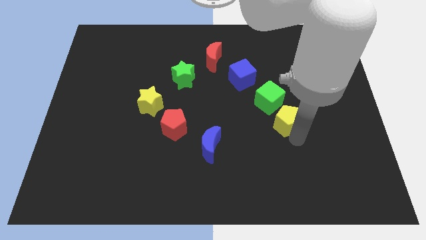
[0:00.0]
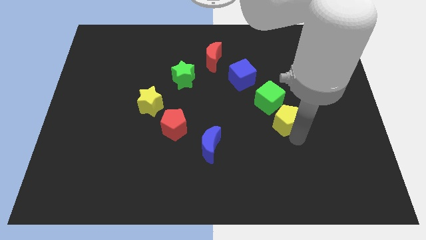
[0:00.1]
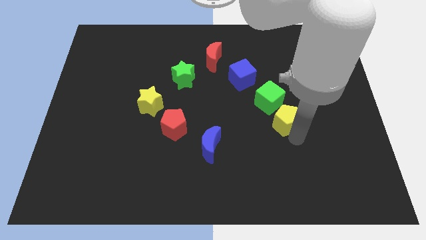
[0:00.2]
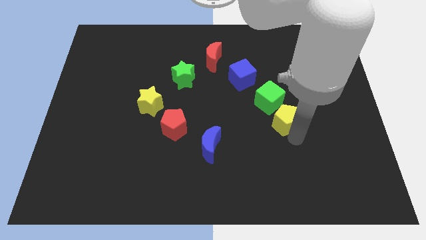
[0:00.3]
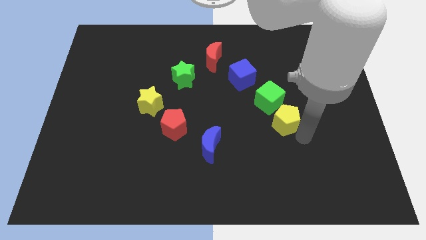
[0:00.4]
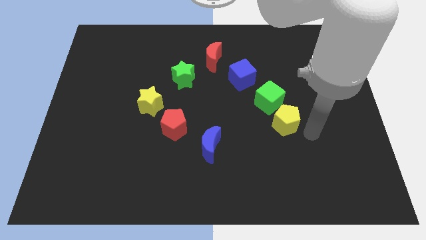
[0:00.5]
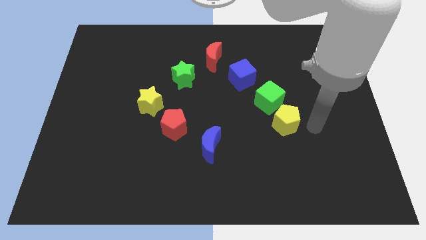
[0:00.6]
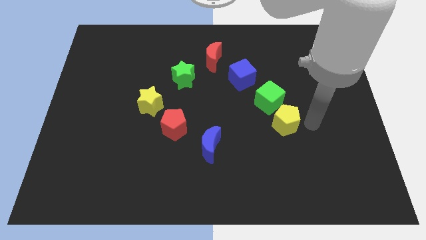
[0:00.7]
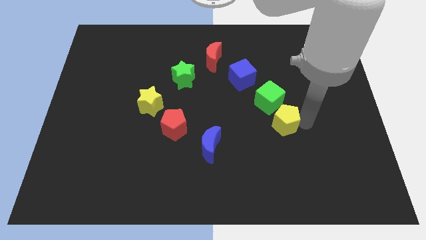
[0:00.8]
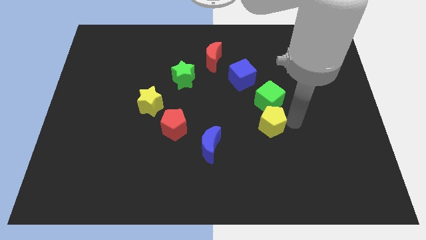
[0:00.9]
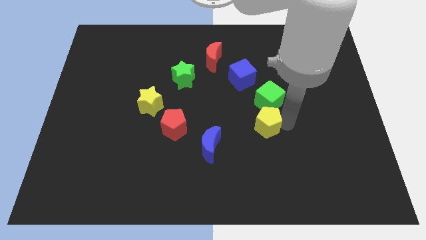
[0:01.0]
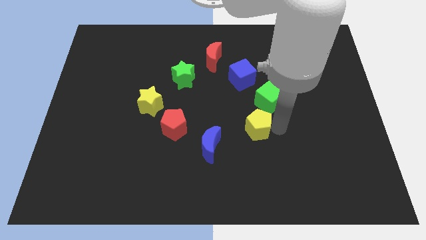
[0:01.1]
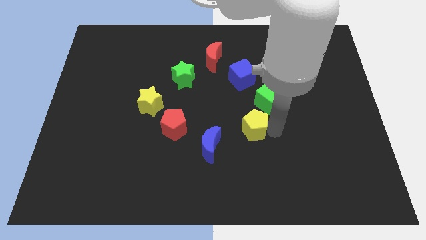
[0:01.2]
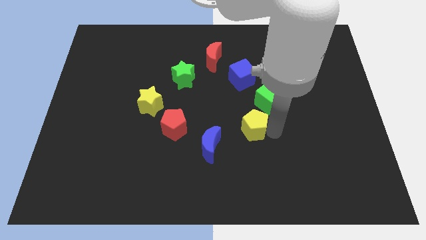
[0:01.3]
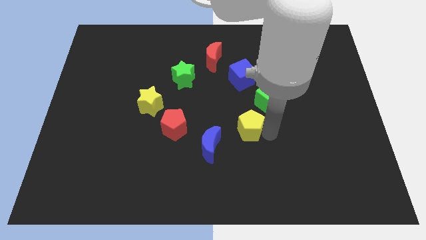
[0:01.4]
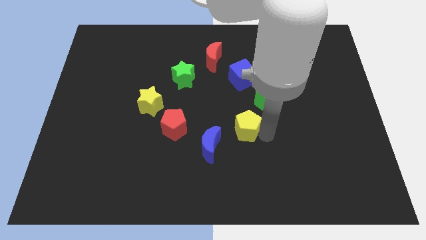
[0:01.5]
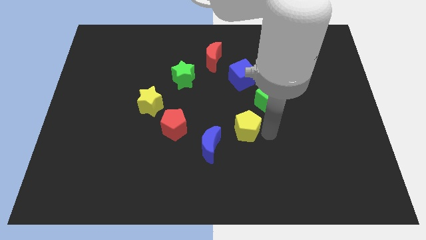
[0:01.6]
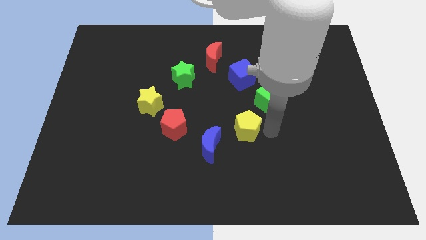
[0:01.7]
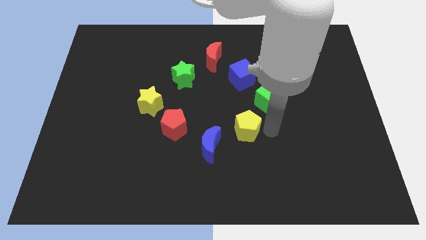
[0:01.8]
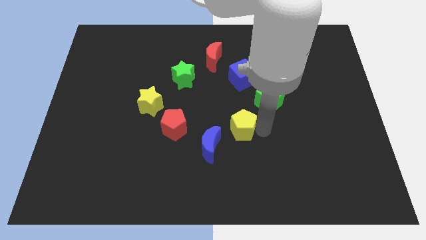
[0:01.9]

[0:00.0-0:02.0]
place the yellow pentagon in between the blue crescent and green cube

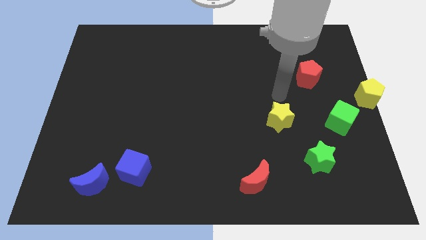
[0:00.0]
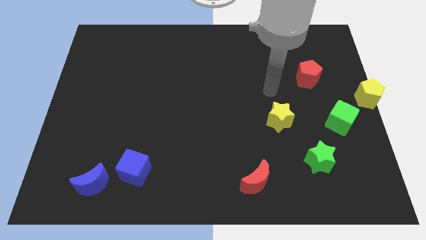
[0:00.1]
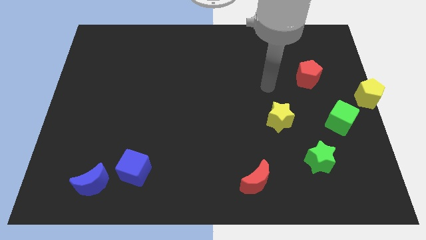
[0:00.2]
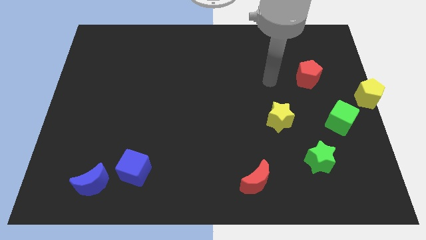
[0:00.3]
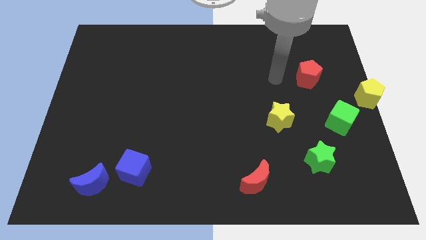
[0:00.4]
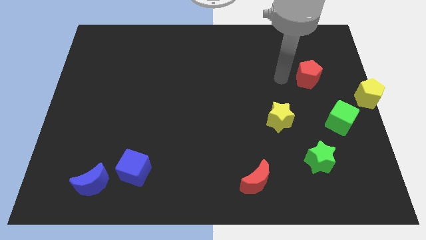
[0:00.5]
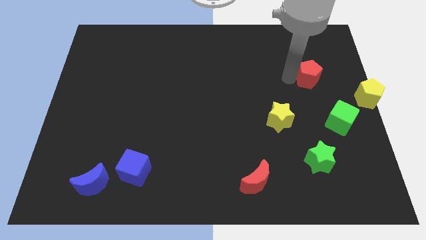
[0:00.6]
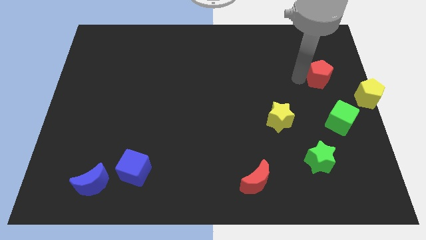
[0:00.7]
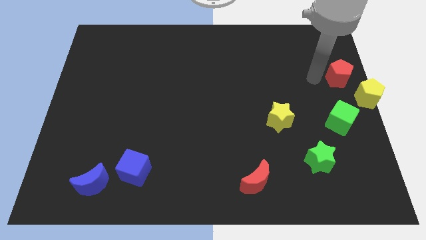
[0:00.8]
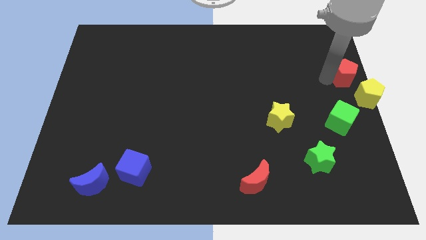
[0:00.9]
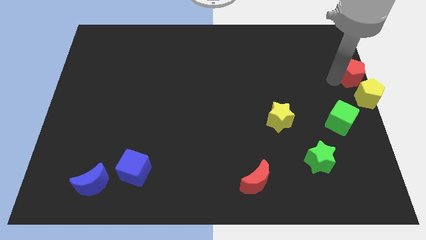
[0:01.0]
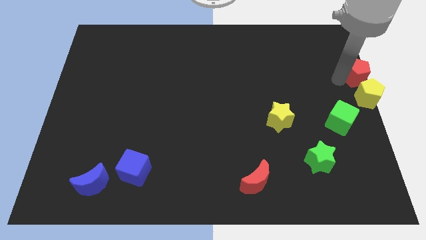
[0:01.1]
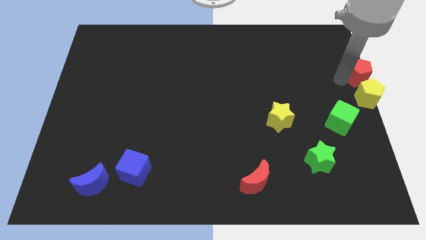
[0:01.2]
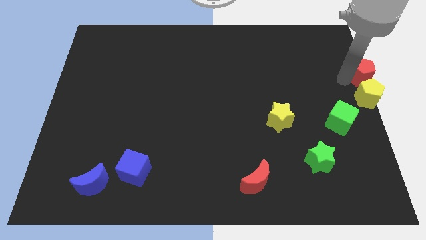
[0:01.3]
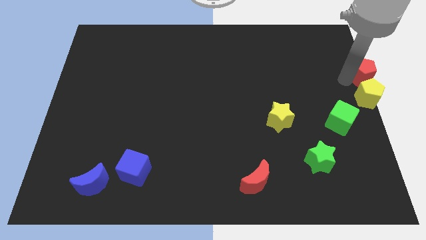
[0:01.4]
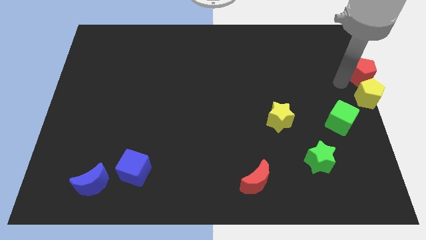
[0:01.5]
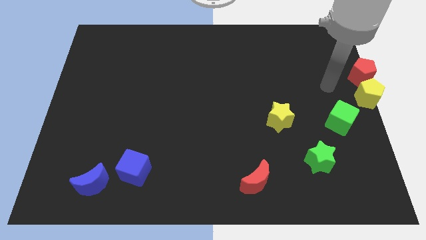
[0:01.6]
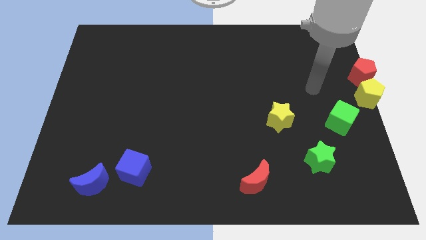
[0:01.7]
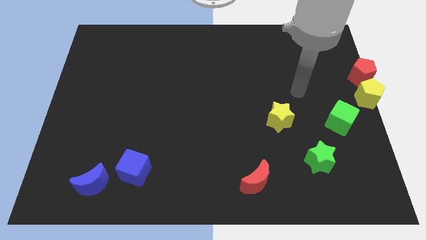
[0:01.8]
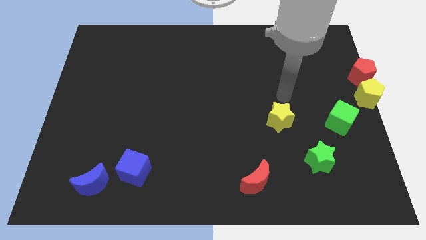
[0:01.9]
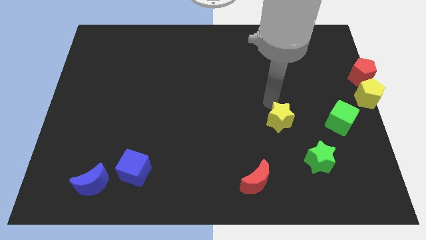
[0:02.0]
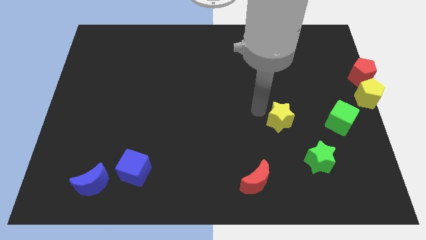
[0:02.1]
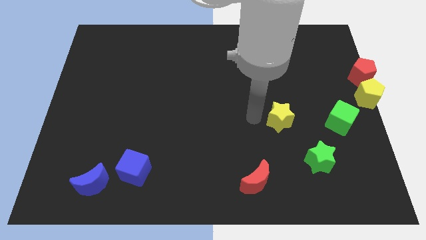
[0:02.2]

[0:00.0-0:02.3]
move the red pentagon on to the top of the yellow pentagon

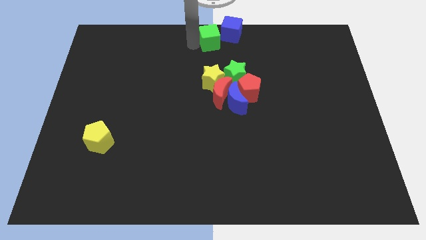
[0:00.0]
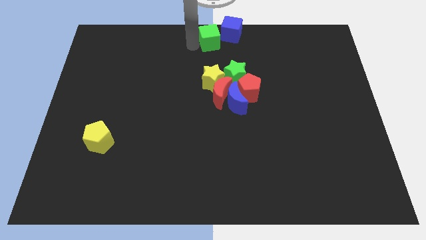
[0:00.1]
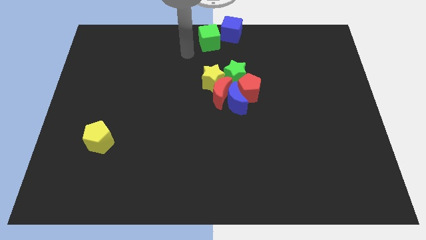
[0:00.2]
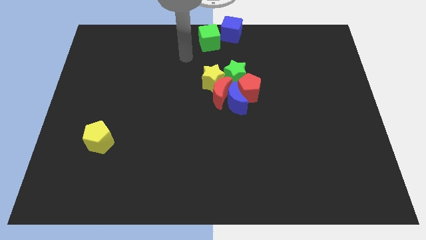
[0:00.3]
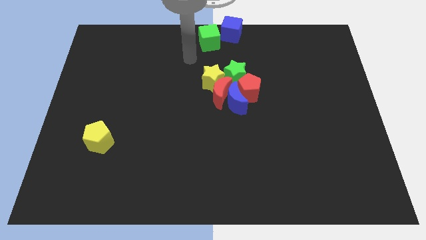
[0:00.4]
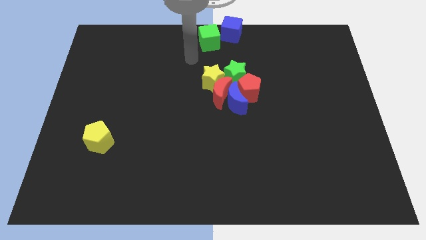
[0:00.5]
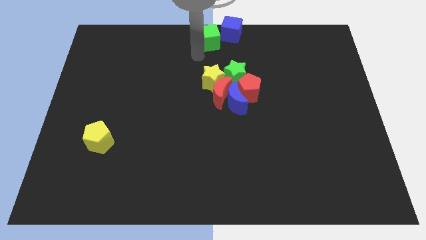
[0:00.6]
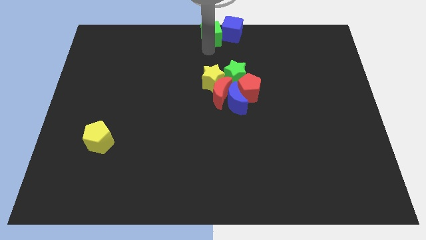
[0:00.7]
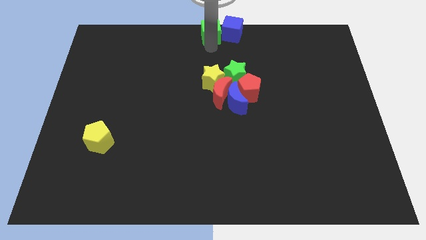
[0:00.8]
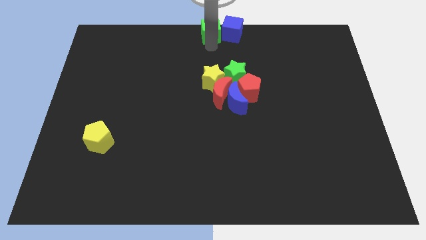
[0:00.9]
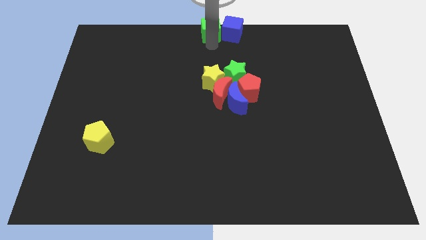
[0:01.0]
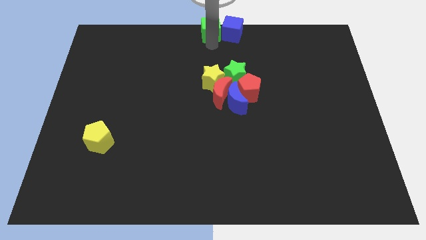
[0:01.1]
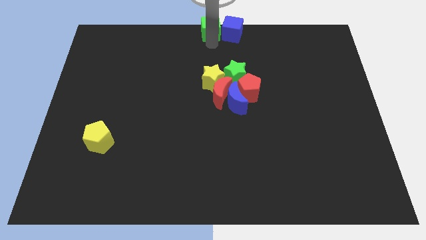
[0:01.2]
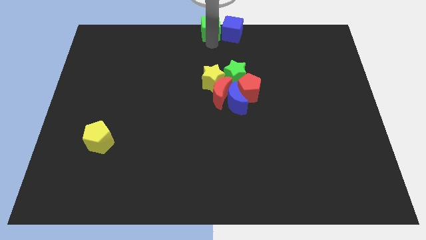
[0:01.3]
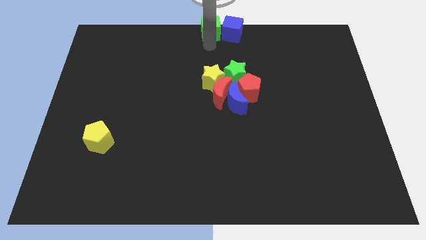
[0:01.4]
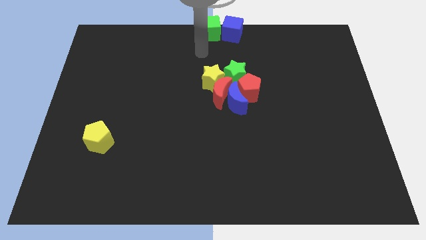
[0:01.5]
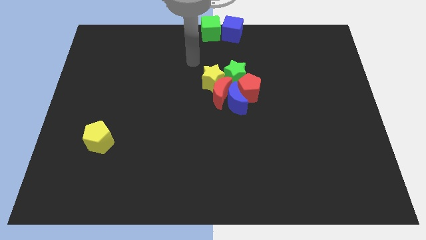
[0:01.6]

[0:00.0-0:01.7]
place the green cube to the left of the blue cube

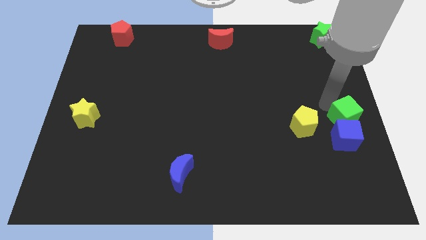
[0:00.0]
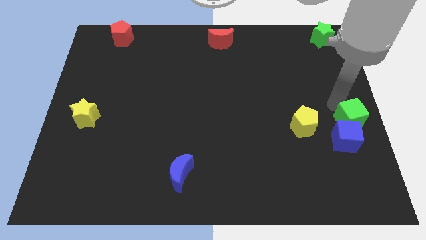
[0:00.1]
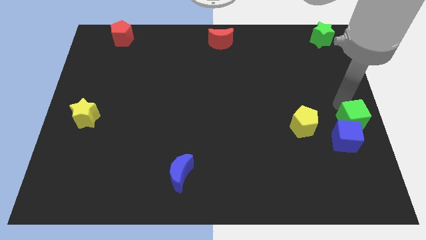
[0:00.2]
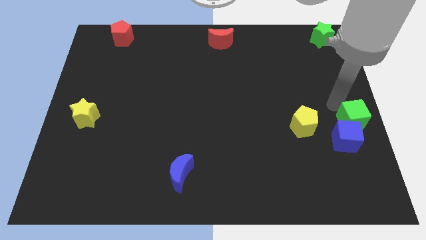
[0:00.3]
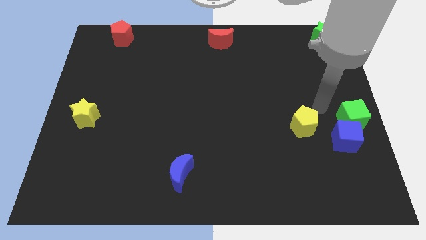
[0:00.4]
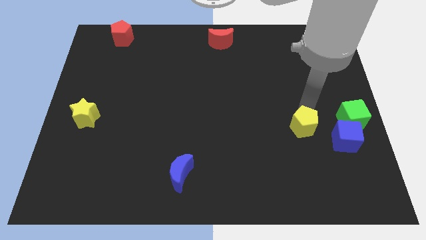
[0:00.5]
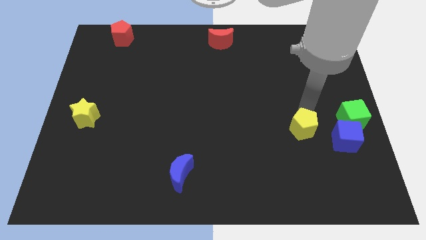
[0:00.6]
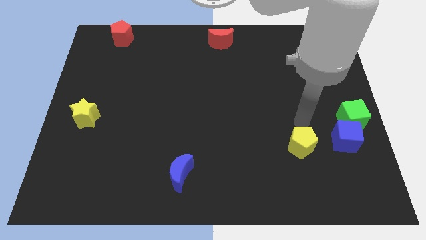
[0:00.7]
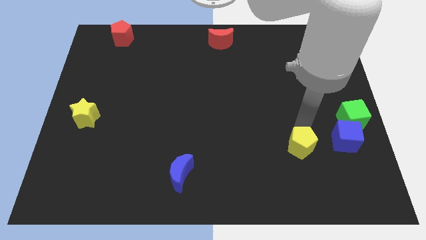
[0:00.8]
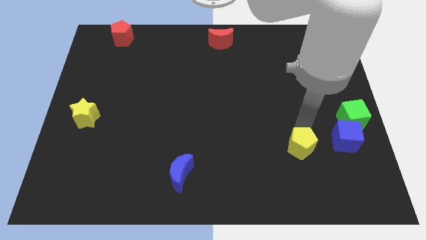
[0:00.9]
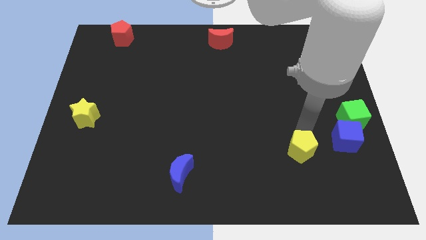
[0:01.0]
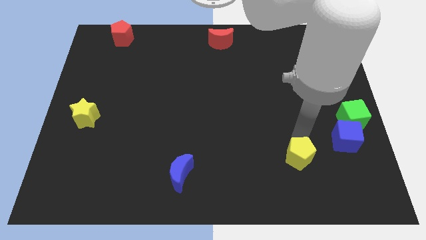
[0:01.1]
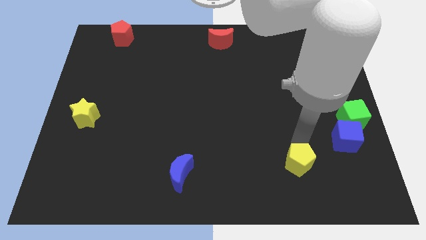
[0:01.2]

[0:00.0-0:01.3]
move your arm away from the green cube

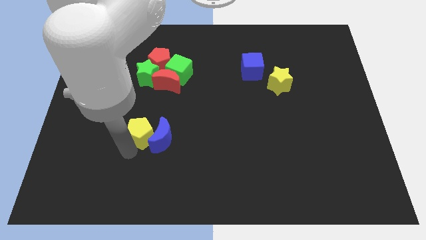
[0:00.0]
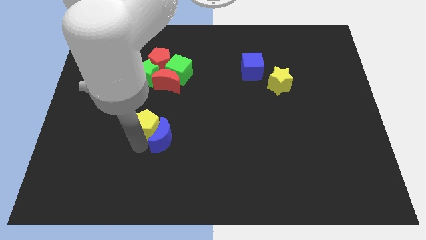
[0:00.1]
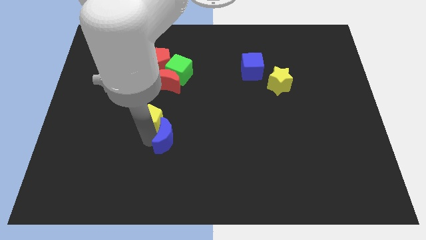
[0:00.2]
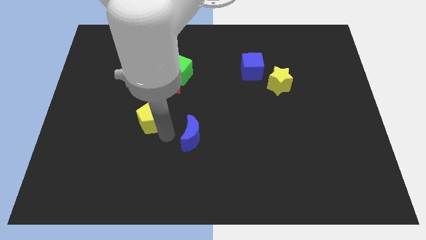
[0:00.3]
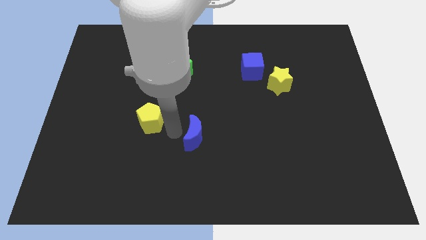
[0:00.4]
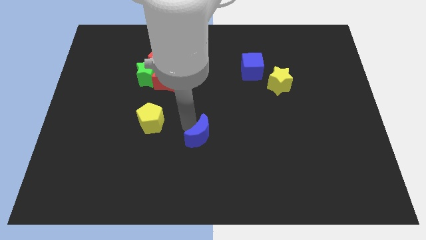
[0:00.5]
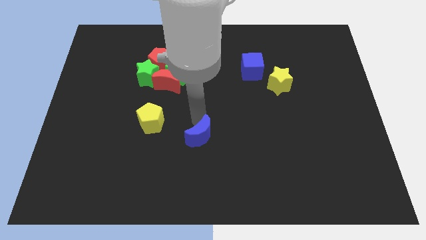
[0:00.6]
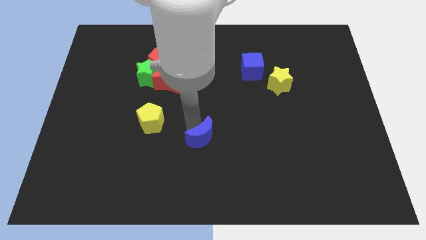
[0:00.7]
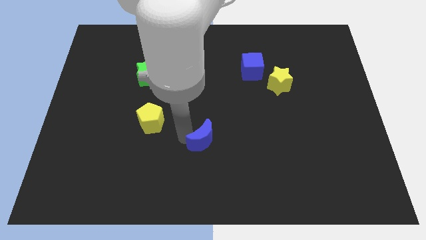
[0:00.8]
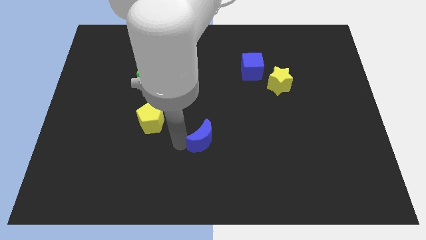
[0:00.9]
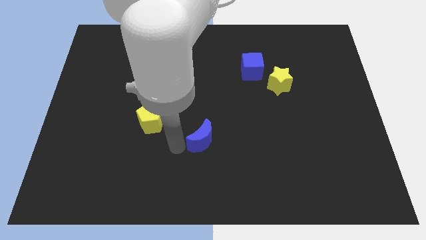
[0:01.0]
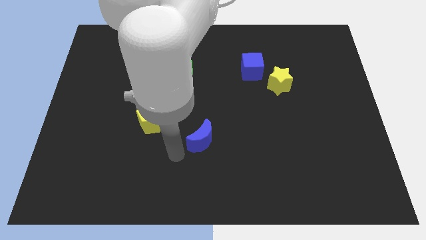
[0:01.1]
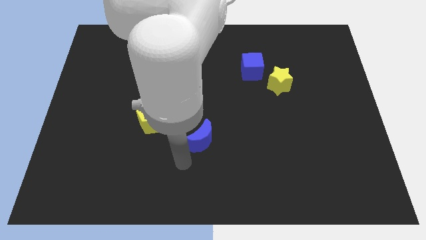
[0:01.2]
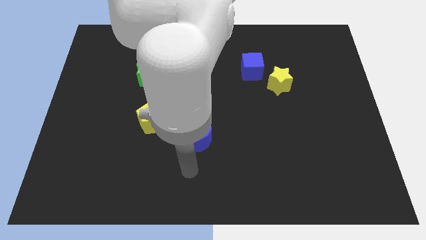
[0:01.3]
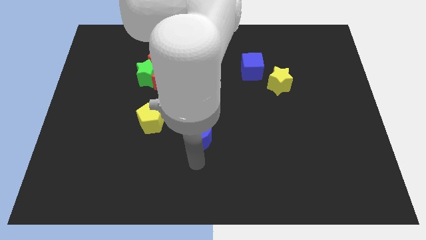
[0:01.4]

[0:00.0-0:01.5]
separate the blue moon from the yellow pentagon
